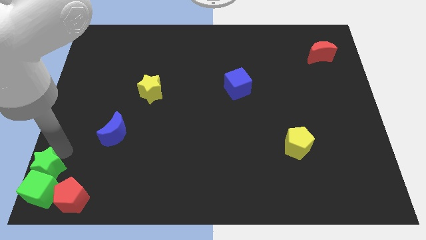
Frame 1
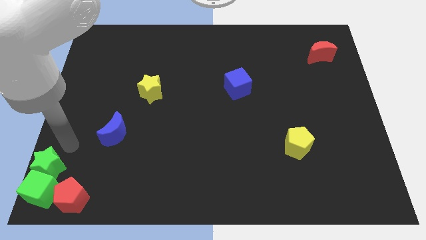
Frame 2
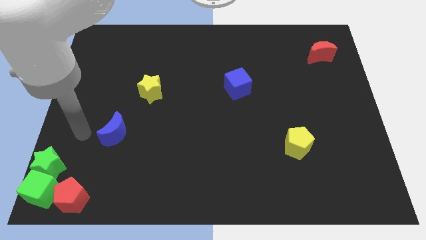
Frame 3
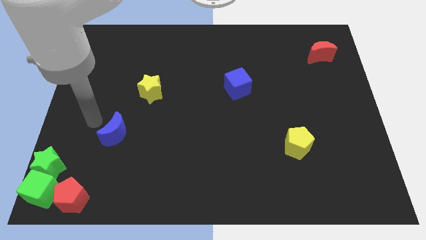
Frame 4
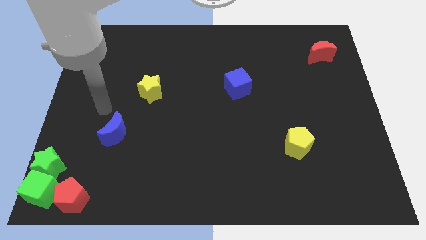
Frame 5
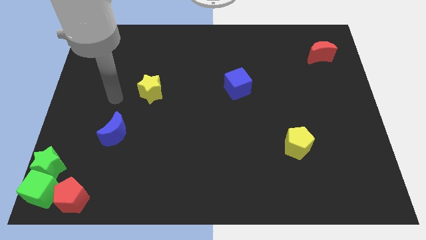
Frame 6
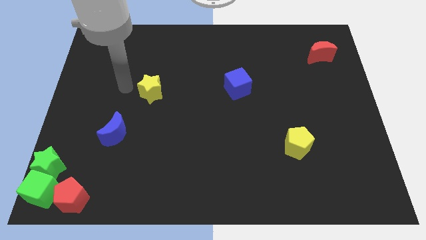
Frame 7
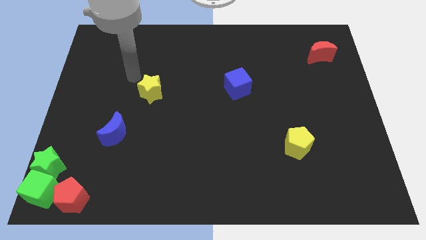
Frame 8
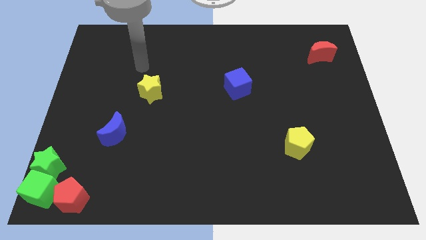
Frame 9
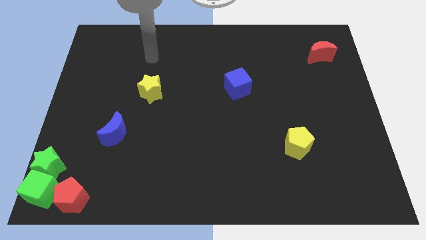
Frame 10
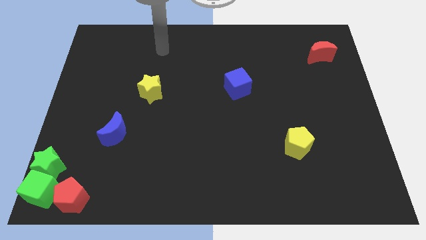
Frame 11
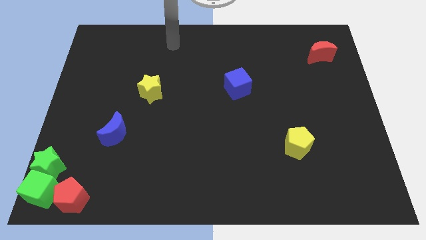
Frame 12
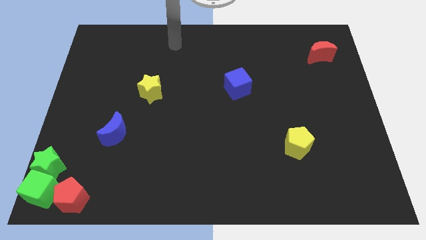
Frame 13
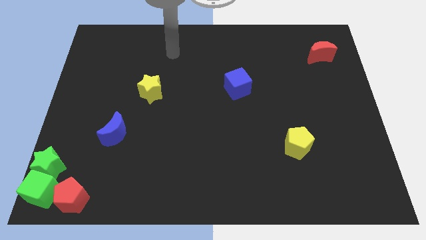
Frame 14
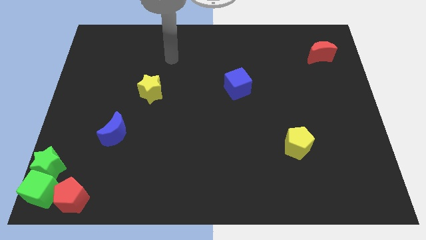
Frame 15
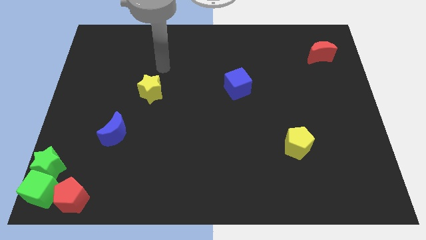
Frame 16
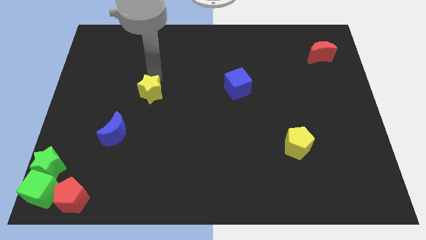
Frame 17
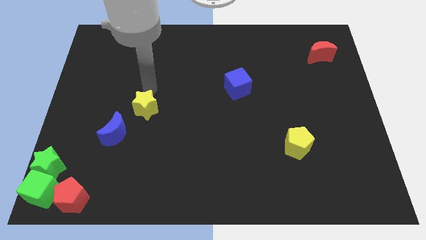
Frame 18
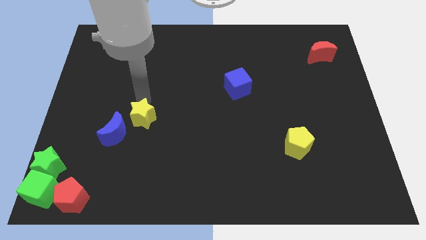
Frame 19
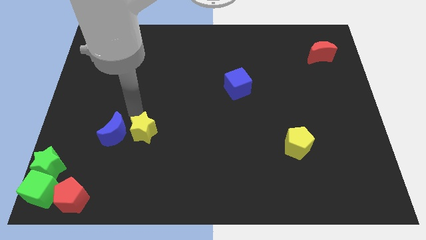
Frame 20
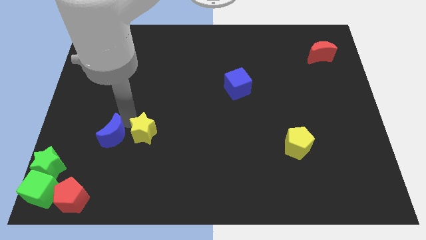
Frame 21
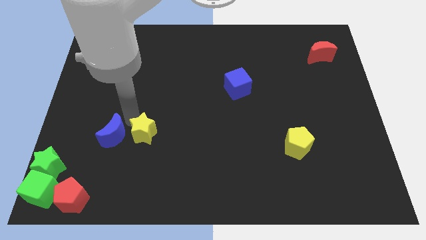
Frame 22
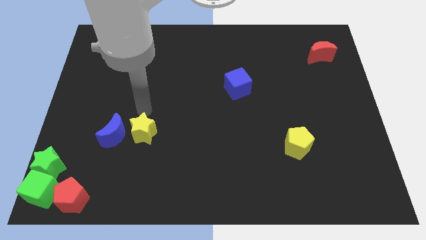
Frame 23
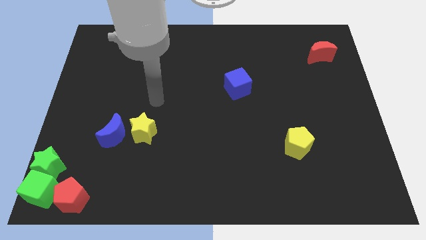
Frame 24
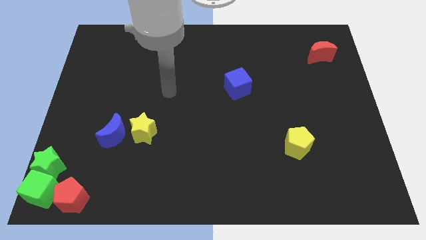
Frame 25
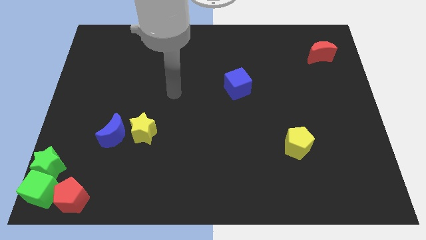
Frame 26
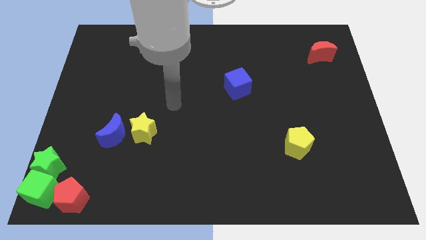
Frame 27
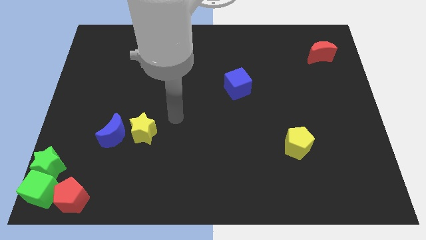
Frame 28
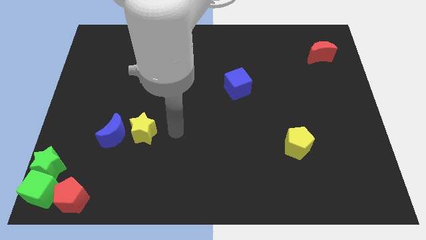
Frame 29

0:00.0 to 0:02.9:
move the yellow star to the right of the blue moon

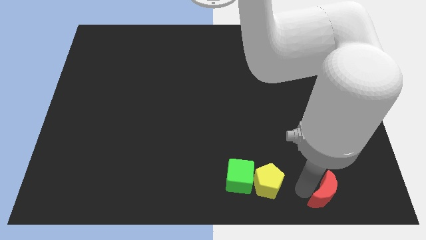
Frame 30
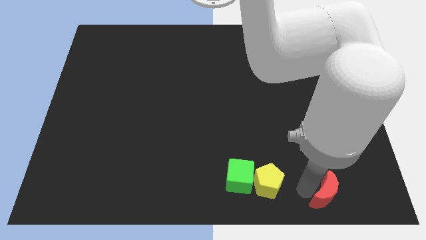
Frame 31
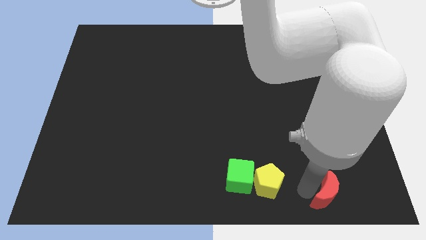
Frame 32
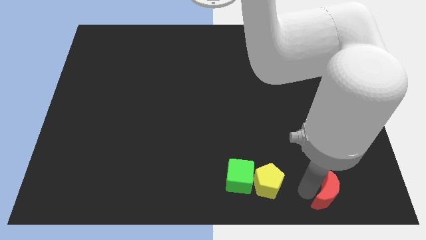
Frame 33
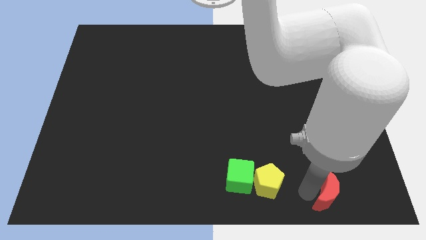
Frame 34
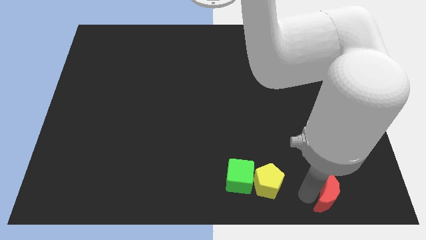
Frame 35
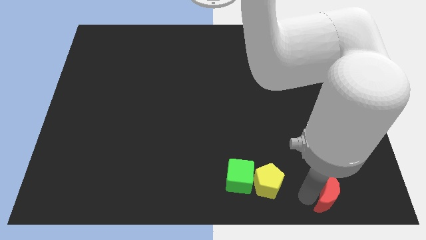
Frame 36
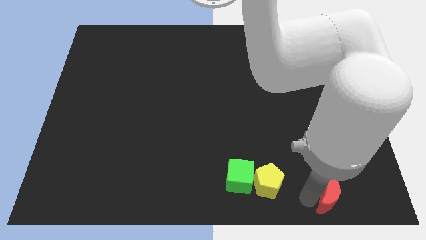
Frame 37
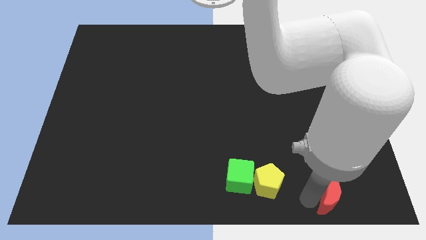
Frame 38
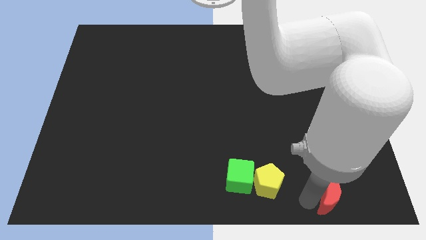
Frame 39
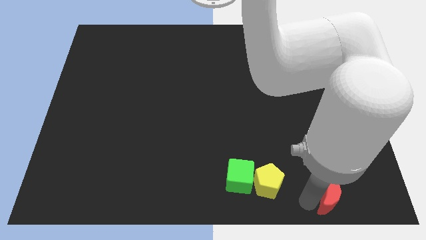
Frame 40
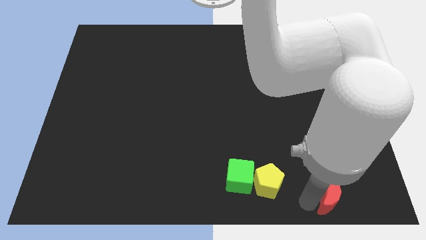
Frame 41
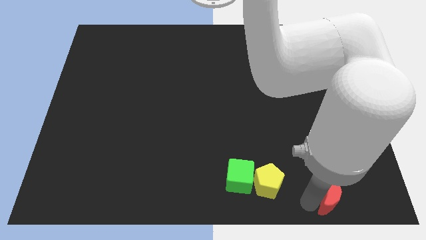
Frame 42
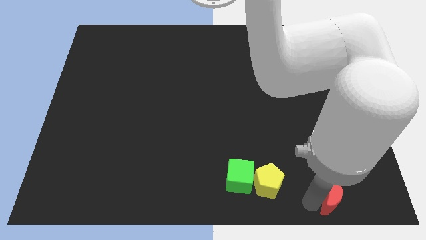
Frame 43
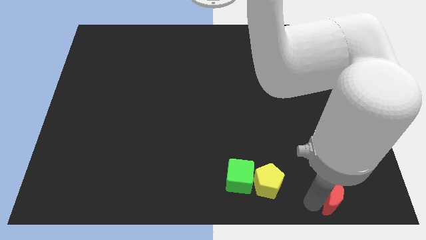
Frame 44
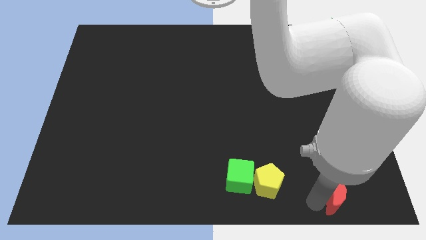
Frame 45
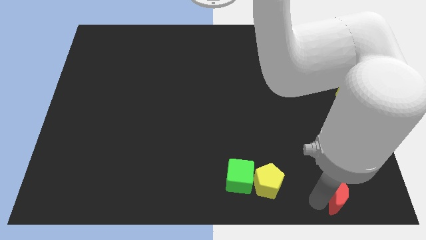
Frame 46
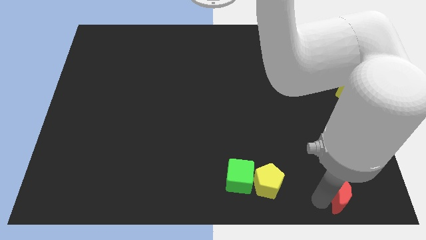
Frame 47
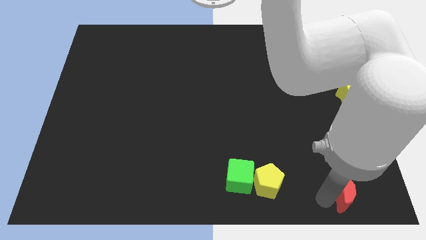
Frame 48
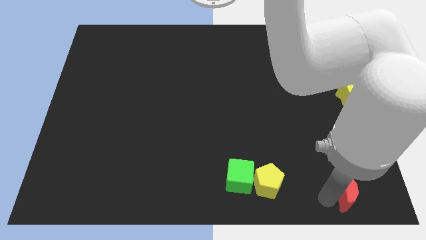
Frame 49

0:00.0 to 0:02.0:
slightly push the red crescent towards the right to the board

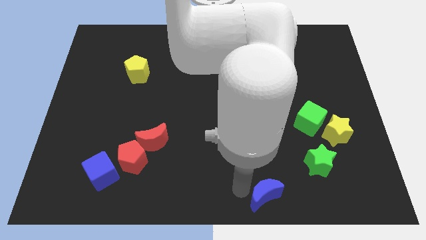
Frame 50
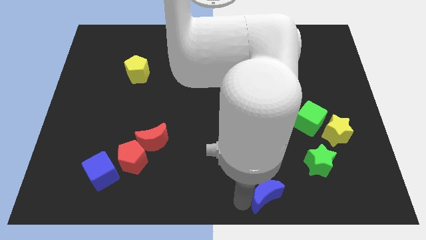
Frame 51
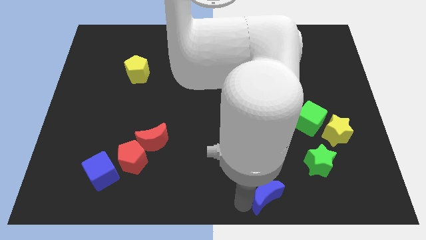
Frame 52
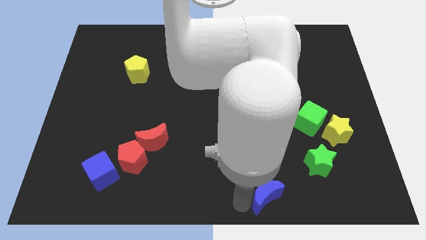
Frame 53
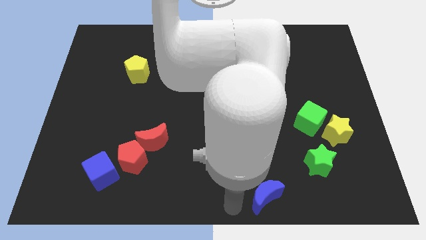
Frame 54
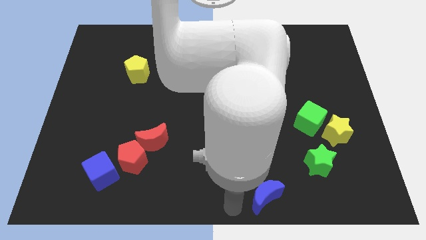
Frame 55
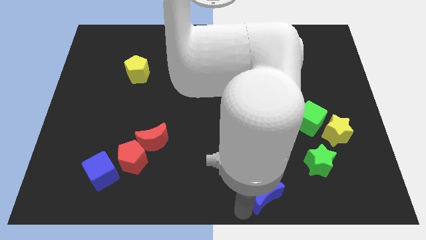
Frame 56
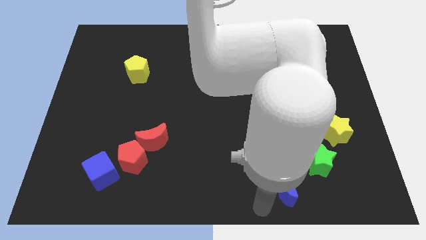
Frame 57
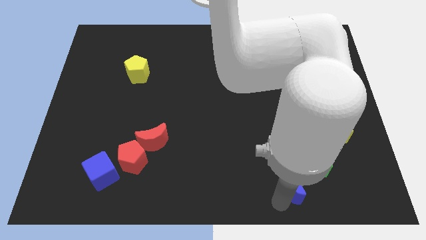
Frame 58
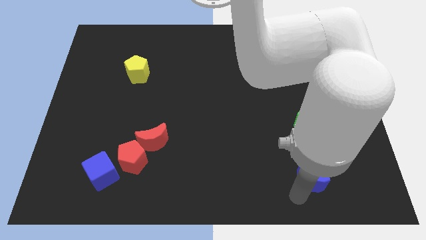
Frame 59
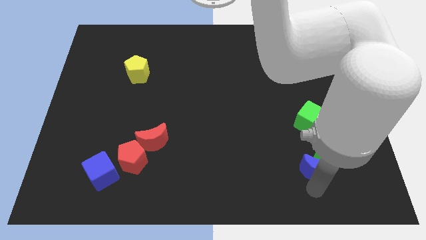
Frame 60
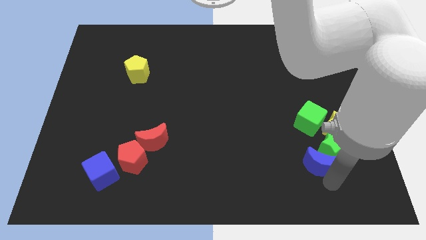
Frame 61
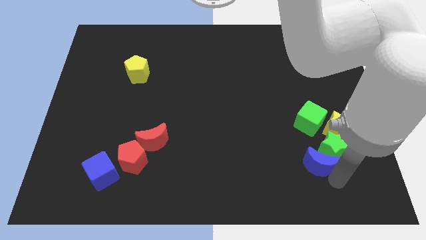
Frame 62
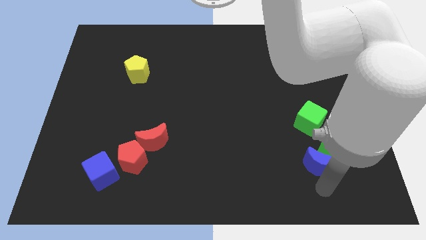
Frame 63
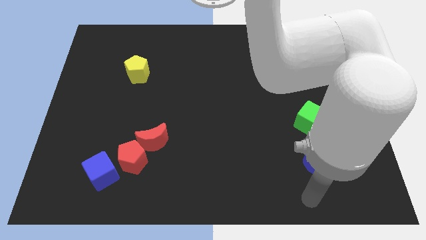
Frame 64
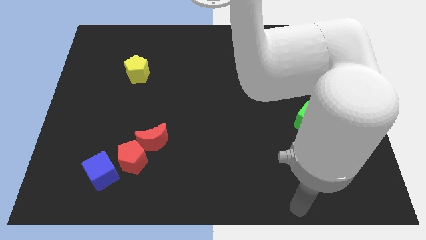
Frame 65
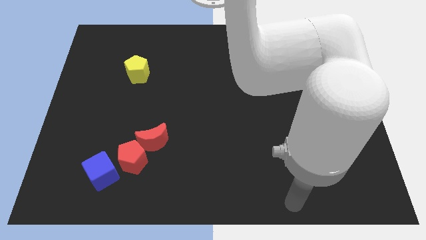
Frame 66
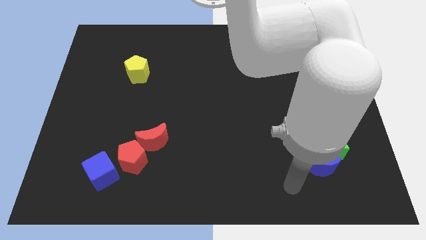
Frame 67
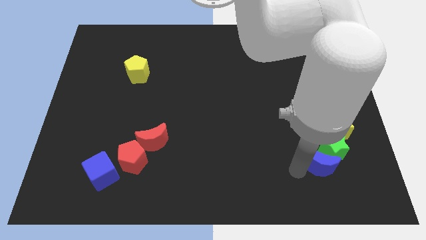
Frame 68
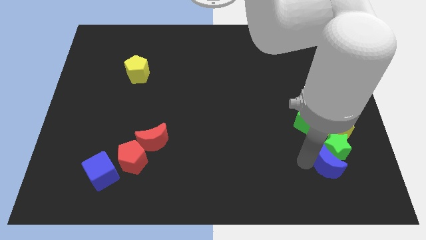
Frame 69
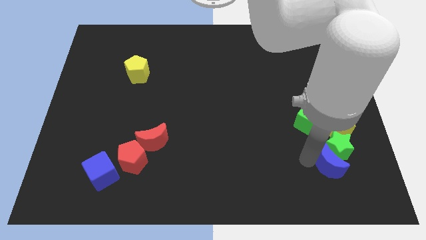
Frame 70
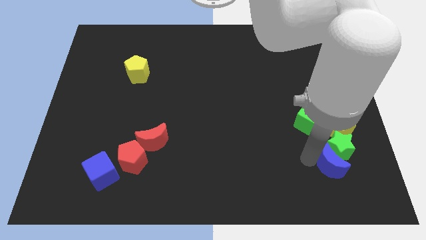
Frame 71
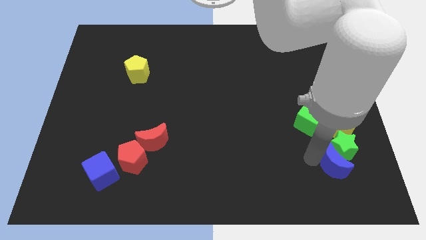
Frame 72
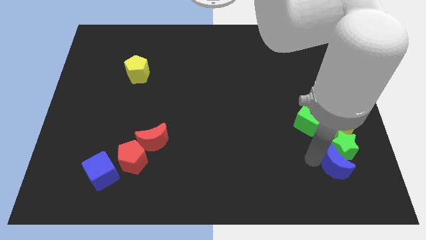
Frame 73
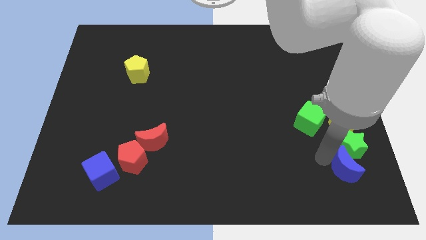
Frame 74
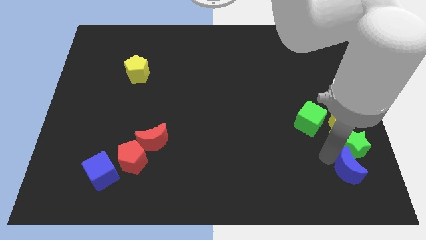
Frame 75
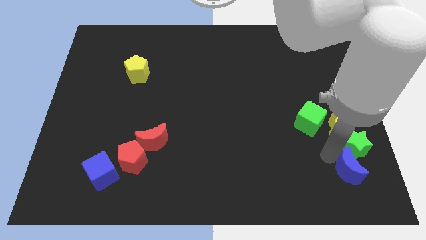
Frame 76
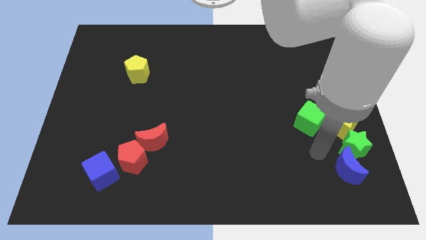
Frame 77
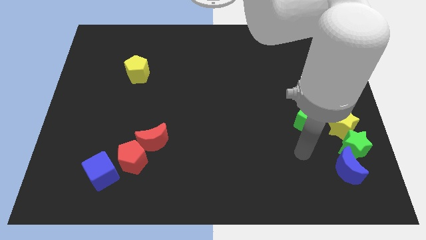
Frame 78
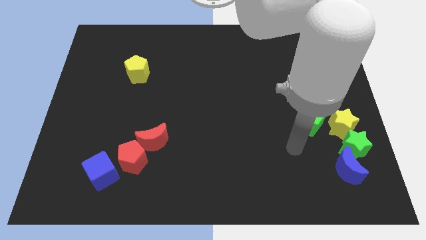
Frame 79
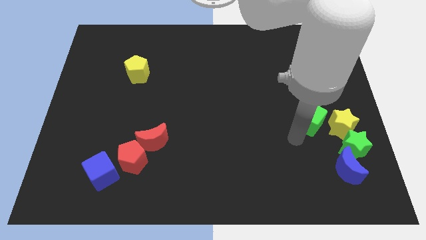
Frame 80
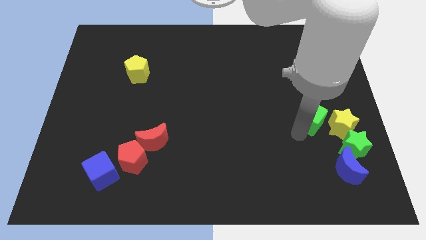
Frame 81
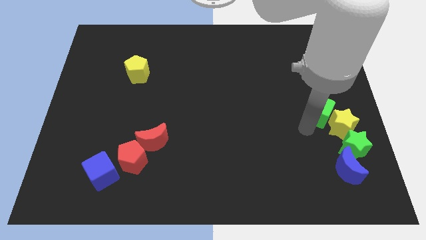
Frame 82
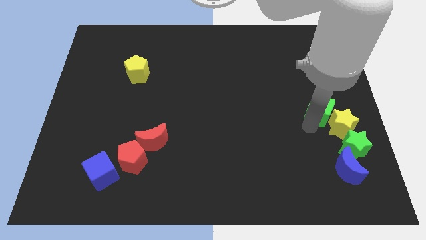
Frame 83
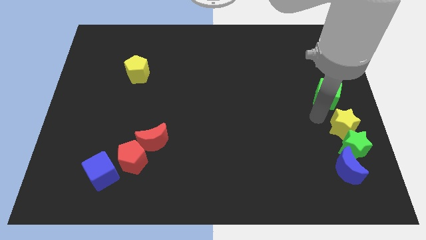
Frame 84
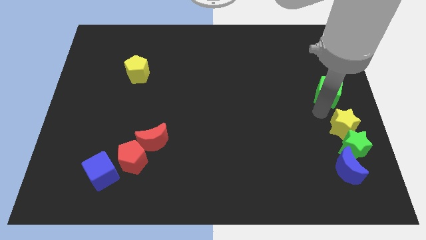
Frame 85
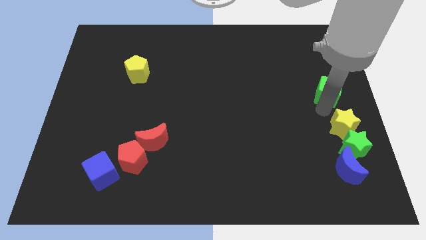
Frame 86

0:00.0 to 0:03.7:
push the blue crescent into the green star

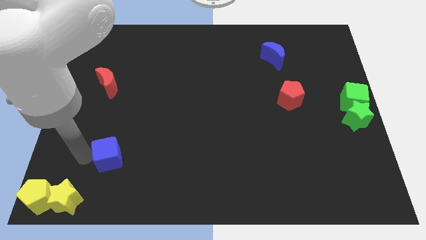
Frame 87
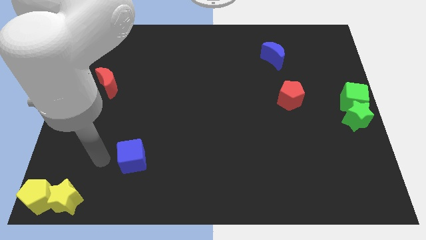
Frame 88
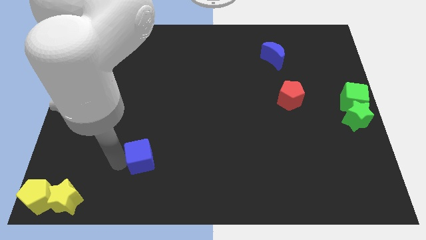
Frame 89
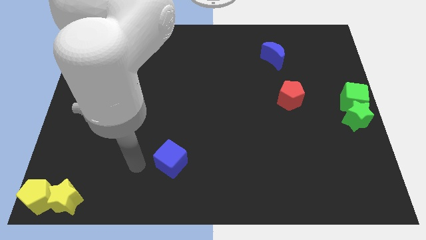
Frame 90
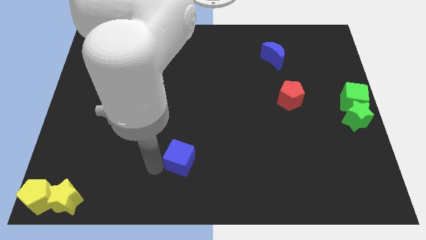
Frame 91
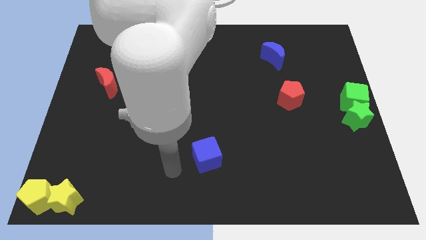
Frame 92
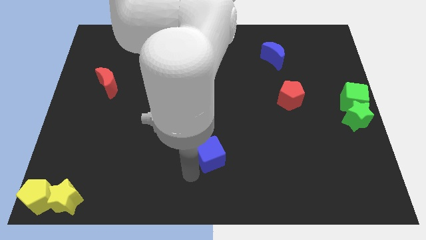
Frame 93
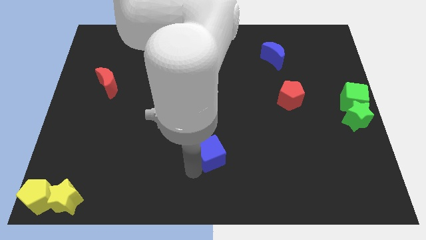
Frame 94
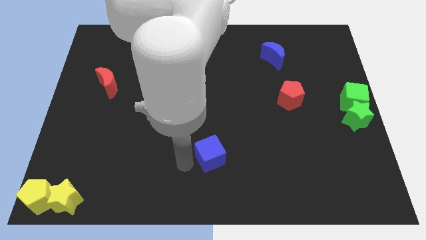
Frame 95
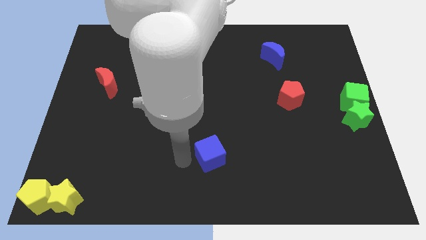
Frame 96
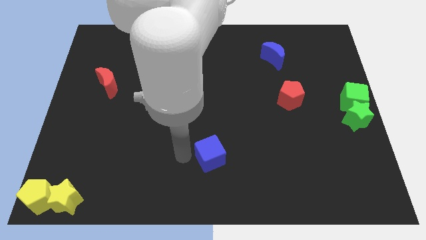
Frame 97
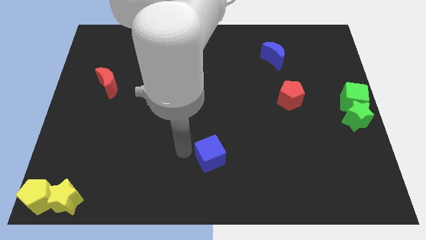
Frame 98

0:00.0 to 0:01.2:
move the blue cube towards the right side of the board
